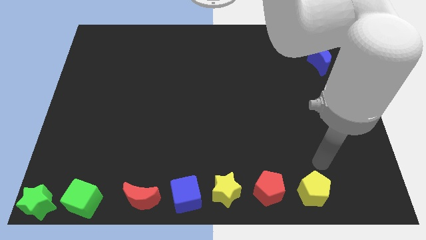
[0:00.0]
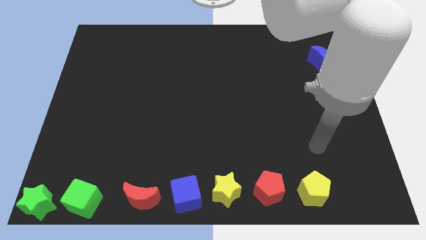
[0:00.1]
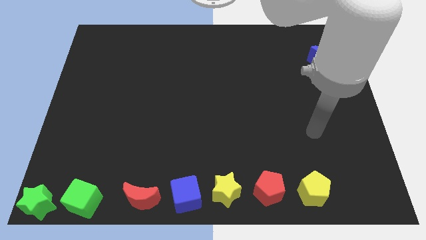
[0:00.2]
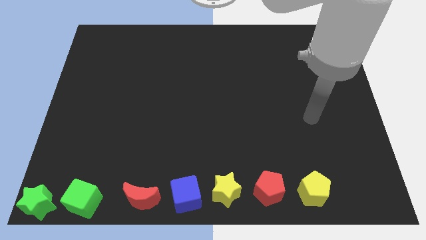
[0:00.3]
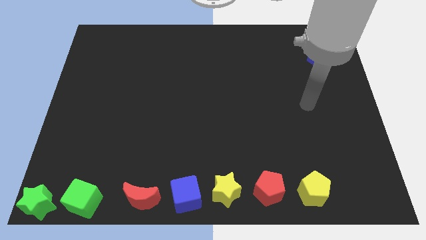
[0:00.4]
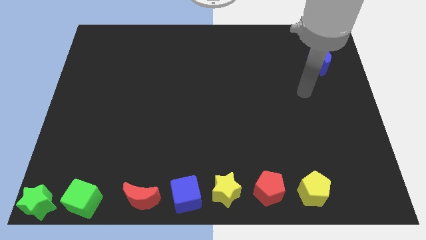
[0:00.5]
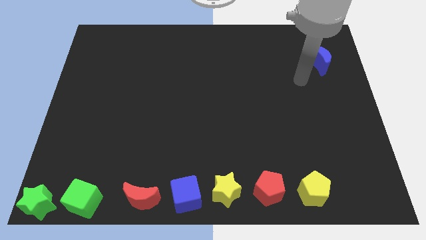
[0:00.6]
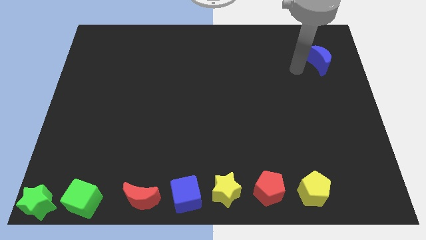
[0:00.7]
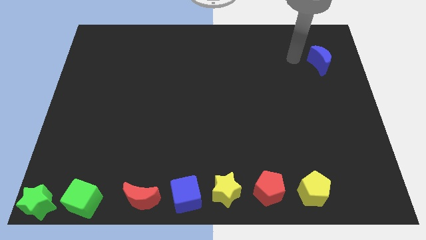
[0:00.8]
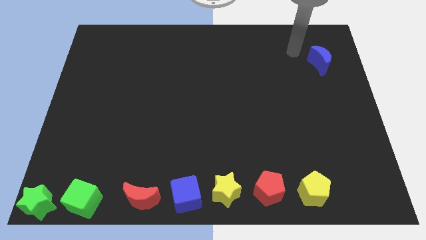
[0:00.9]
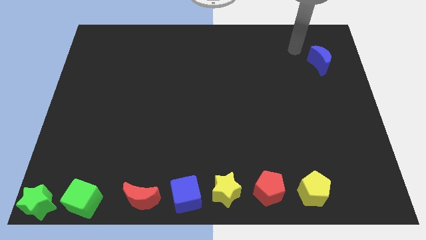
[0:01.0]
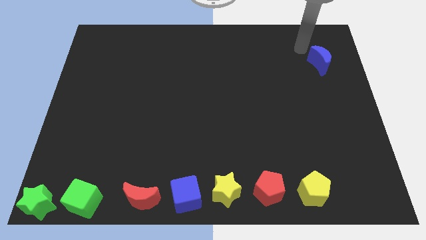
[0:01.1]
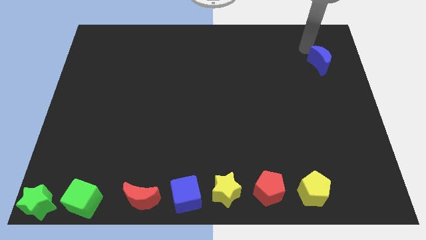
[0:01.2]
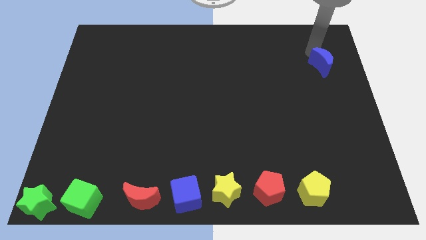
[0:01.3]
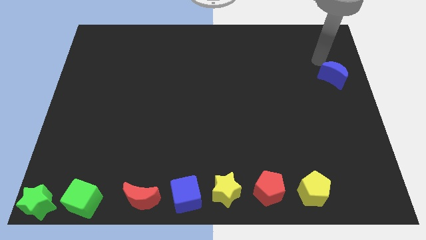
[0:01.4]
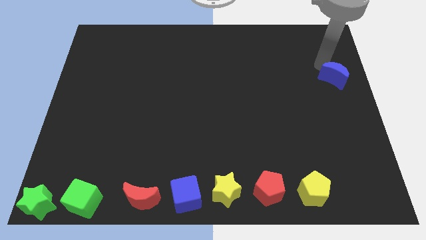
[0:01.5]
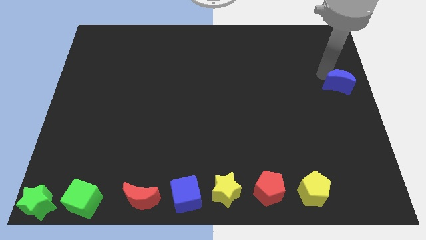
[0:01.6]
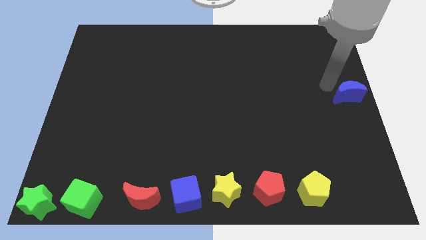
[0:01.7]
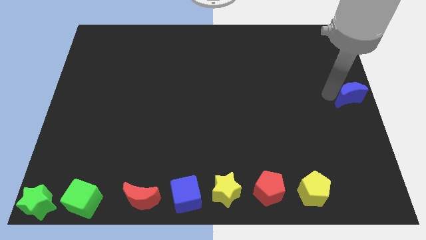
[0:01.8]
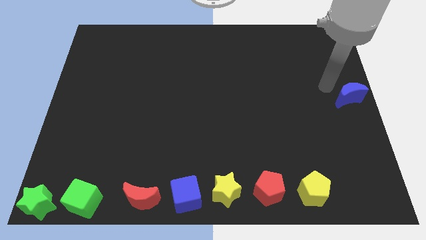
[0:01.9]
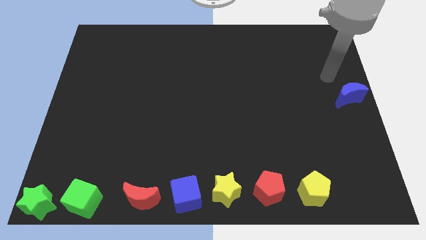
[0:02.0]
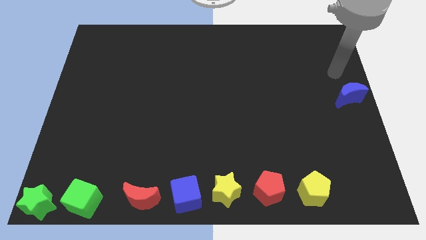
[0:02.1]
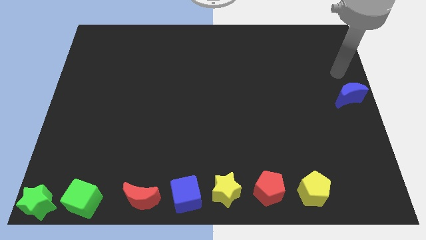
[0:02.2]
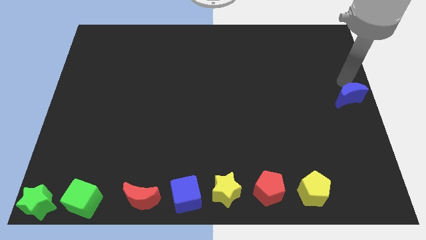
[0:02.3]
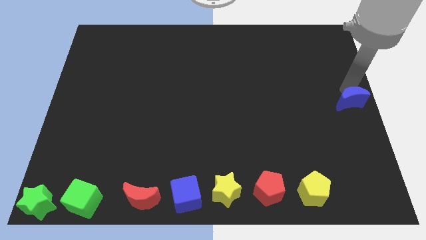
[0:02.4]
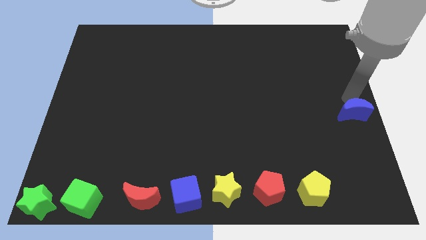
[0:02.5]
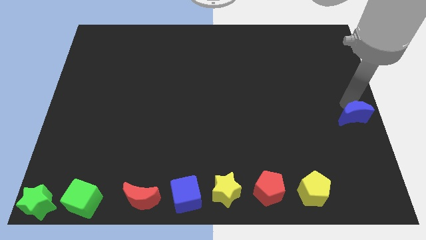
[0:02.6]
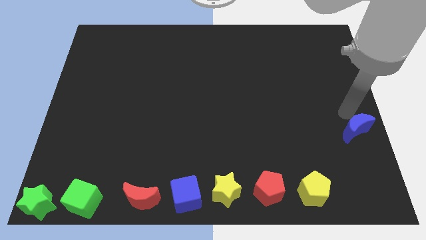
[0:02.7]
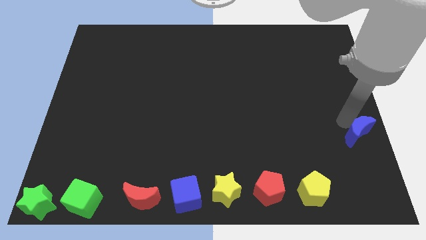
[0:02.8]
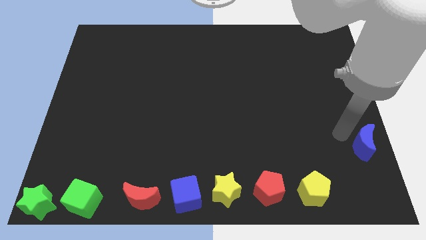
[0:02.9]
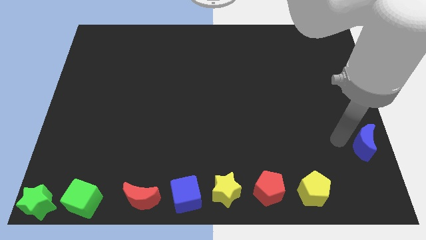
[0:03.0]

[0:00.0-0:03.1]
move the blue moon to the bottom right side of the table

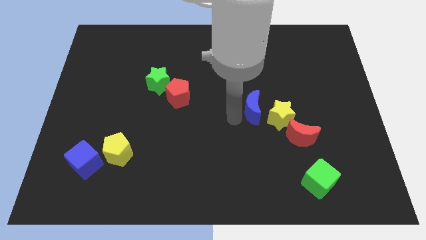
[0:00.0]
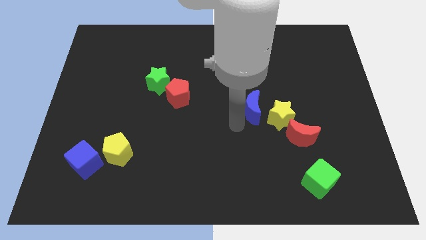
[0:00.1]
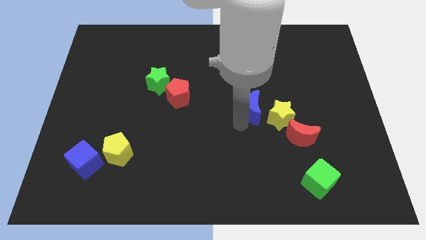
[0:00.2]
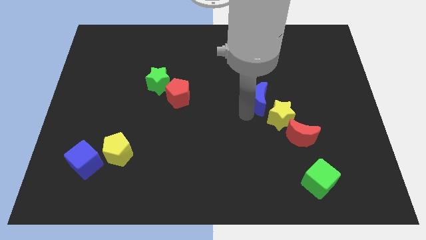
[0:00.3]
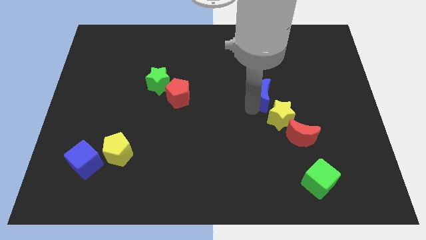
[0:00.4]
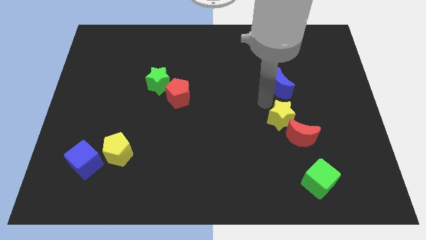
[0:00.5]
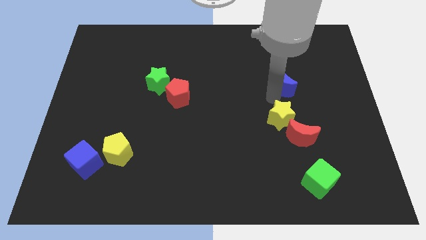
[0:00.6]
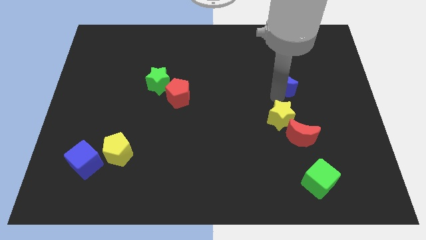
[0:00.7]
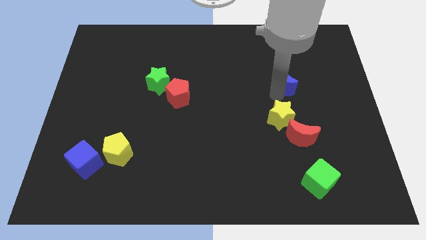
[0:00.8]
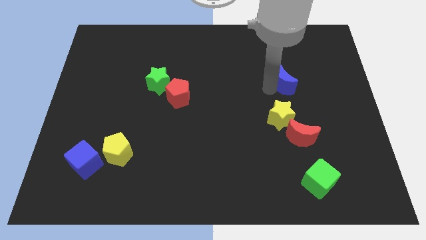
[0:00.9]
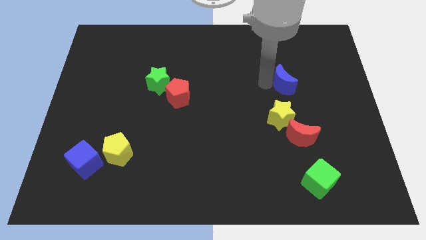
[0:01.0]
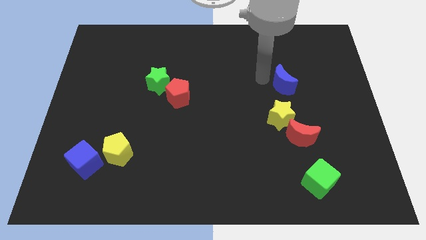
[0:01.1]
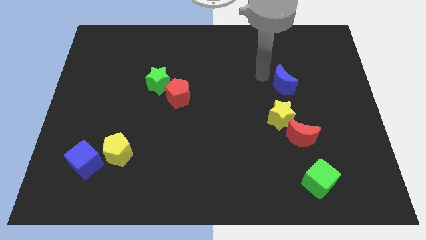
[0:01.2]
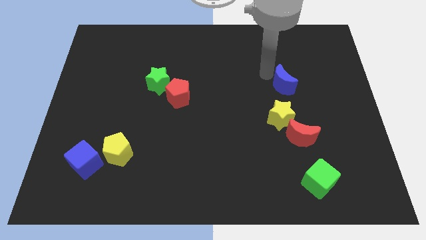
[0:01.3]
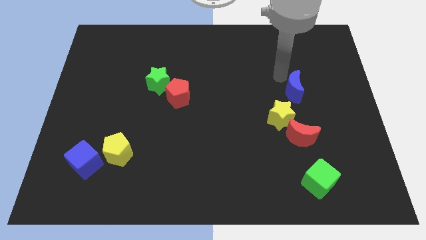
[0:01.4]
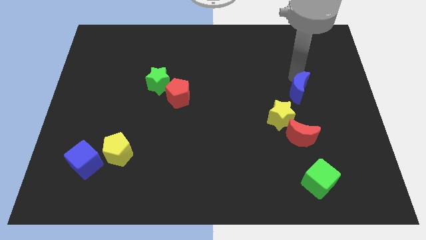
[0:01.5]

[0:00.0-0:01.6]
place the blue moon above the yellow star

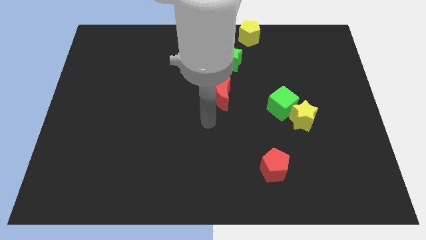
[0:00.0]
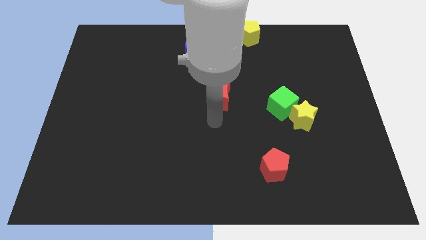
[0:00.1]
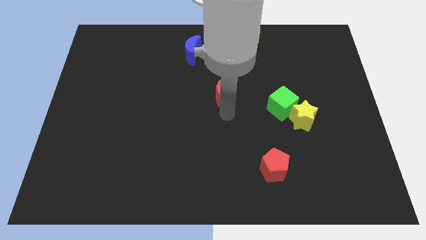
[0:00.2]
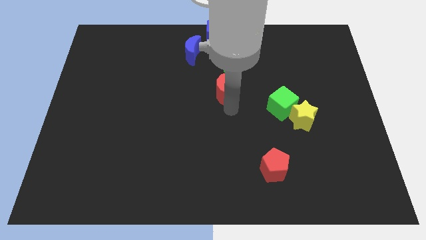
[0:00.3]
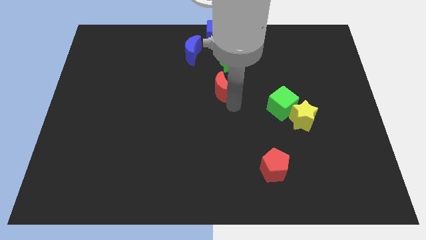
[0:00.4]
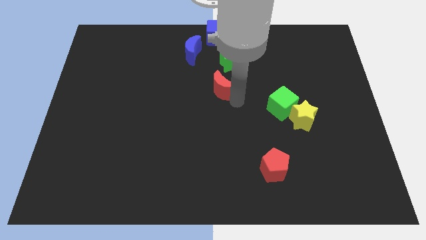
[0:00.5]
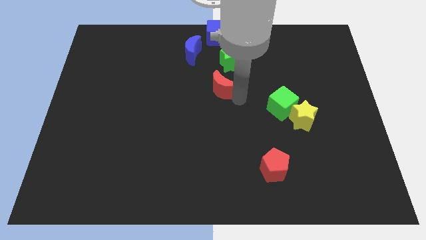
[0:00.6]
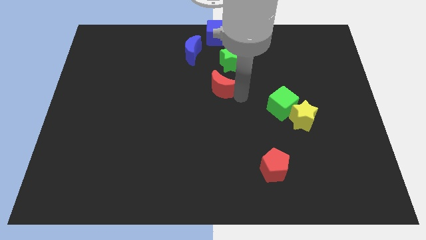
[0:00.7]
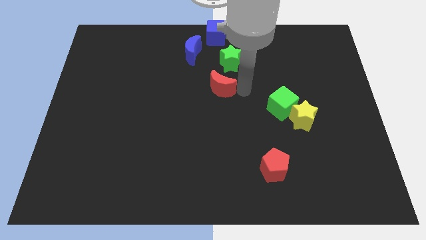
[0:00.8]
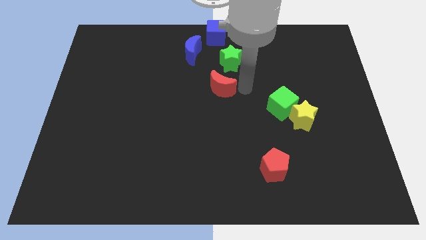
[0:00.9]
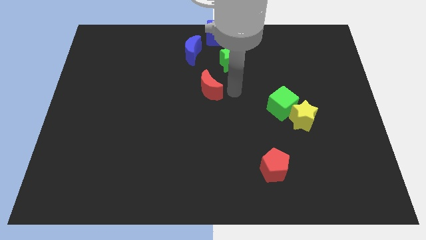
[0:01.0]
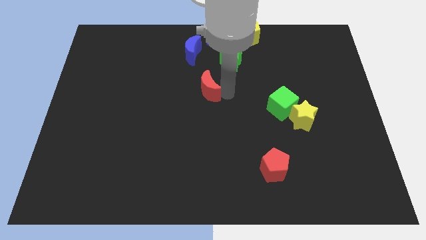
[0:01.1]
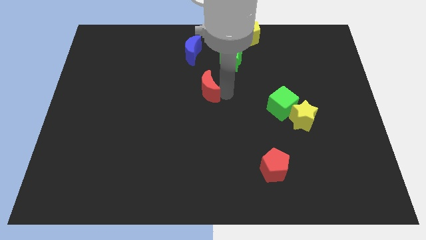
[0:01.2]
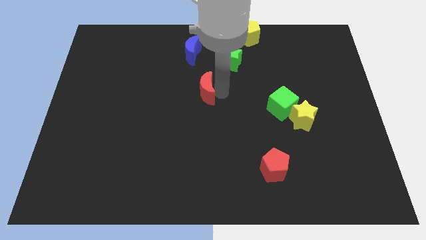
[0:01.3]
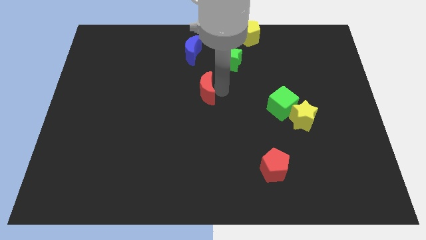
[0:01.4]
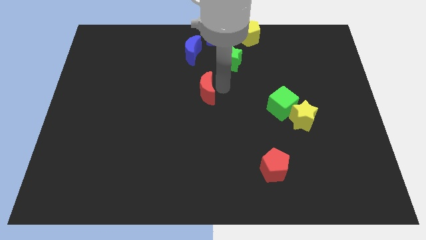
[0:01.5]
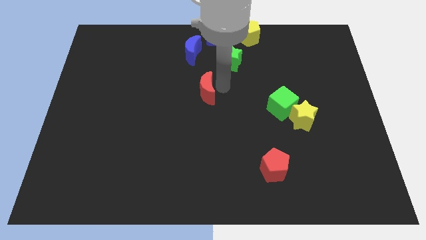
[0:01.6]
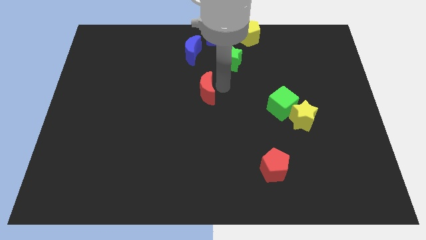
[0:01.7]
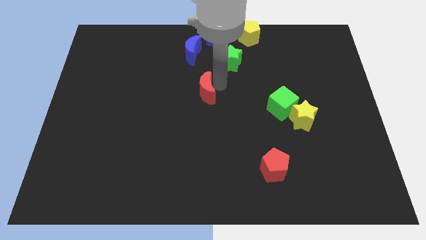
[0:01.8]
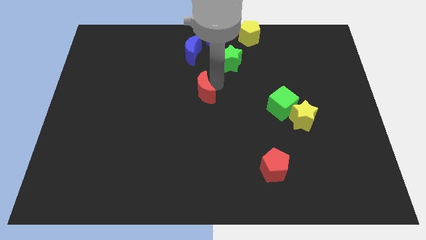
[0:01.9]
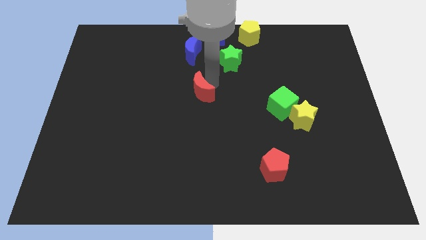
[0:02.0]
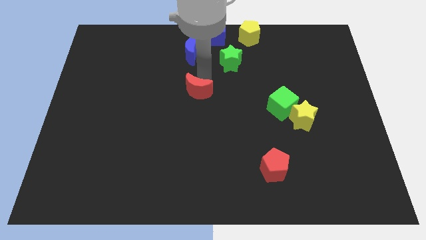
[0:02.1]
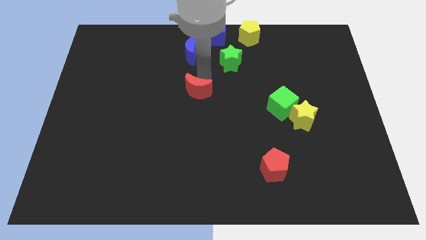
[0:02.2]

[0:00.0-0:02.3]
move the red moon aside from the bottom side of the green star

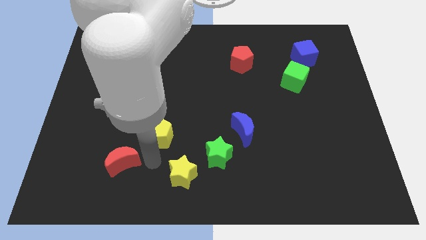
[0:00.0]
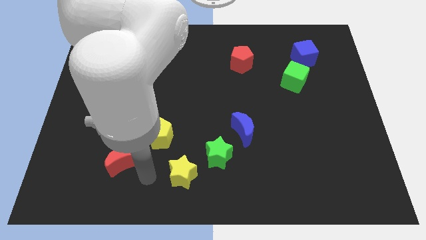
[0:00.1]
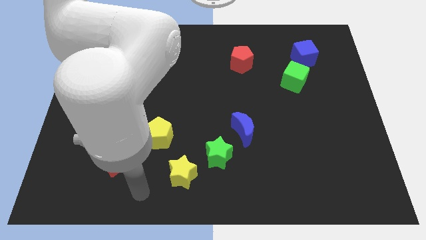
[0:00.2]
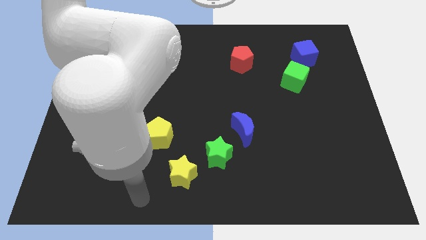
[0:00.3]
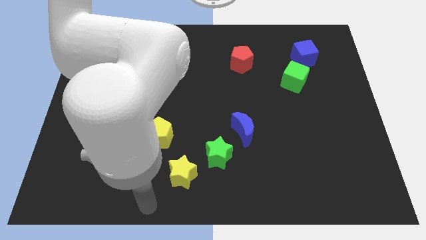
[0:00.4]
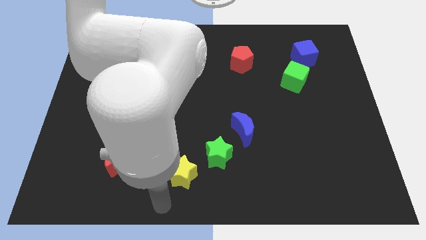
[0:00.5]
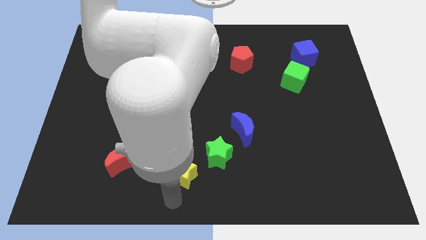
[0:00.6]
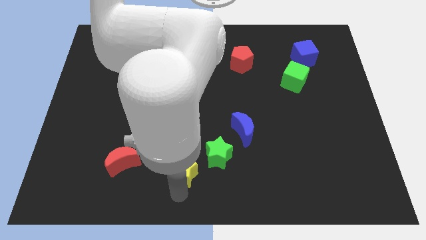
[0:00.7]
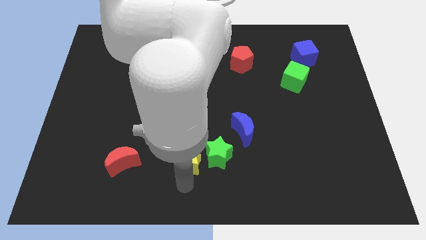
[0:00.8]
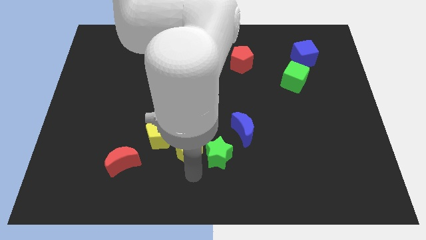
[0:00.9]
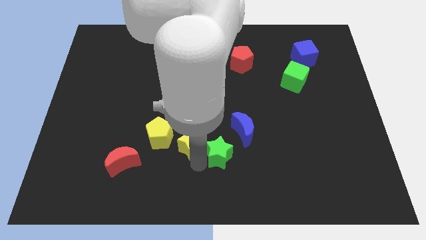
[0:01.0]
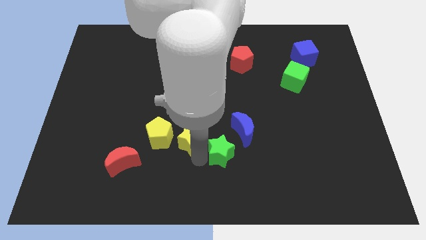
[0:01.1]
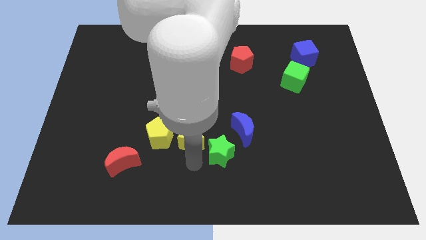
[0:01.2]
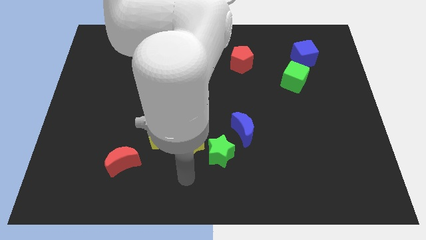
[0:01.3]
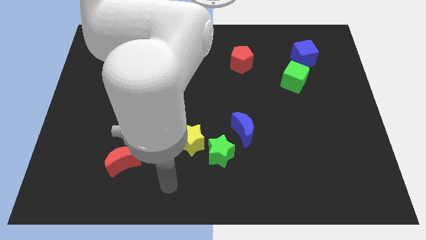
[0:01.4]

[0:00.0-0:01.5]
move the yellow star to the right of the yellow pentagon

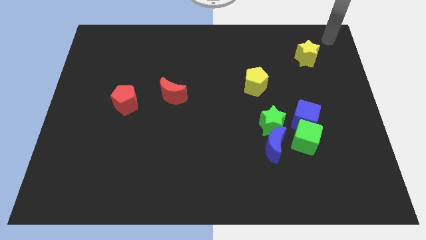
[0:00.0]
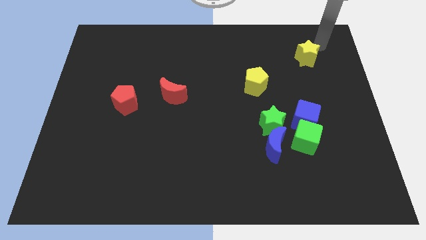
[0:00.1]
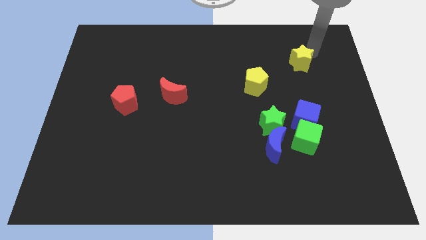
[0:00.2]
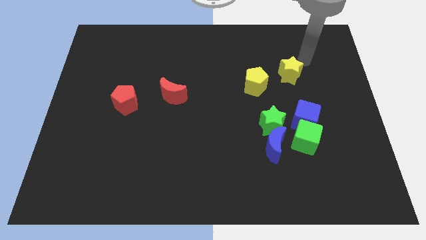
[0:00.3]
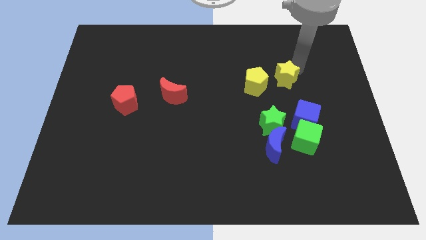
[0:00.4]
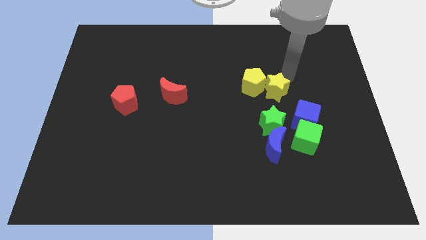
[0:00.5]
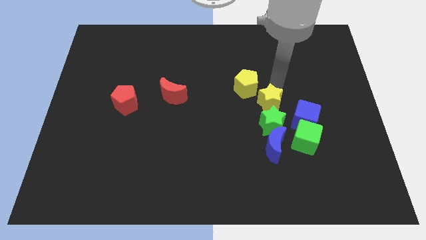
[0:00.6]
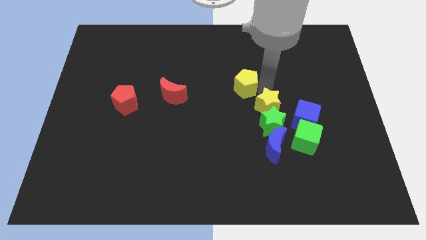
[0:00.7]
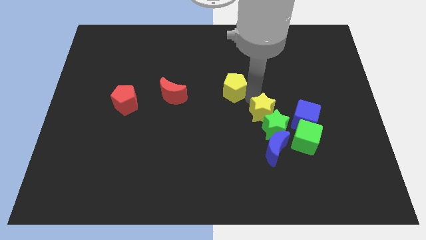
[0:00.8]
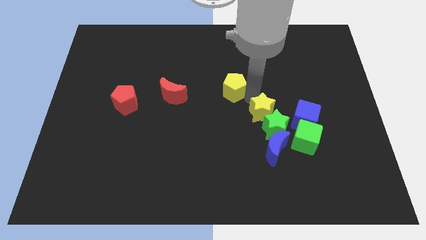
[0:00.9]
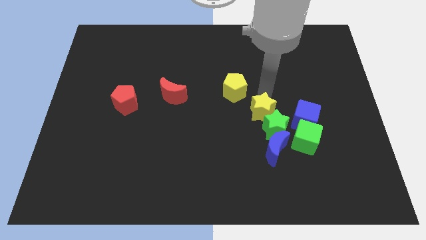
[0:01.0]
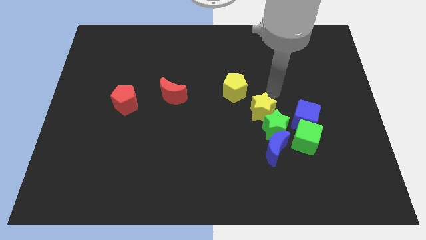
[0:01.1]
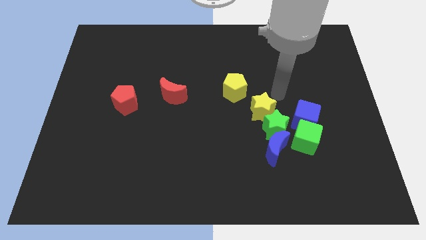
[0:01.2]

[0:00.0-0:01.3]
push the yellow star into the green star
